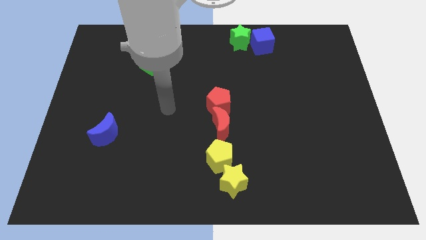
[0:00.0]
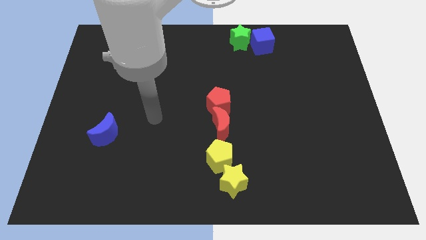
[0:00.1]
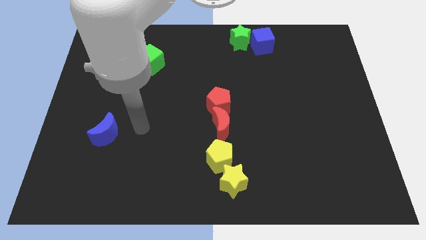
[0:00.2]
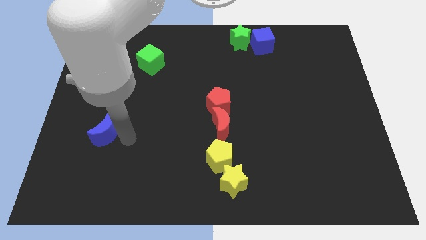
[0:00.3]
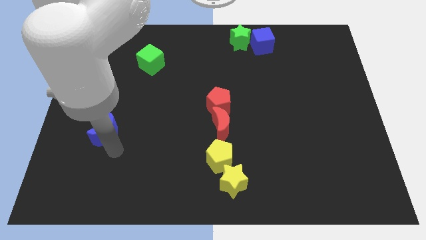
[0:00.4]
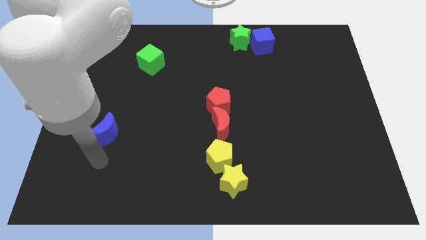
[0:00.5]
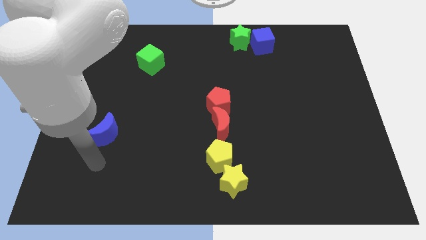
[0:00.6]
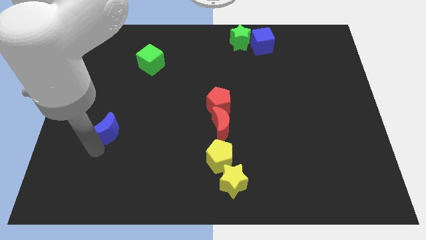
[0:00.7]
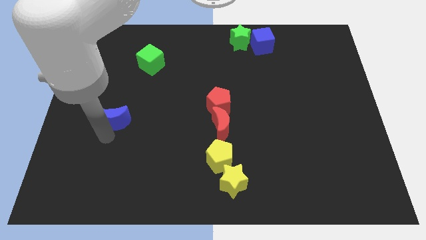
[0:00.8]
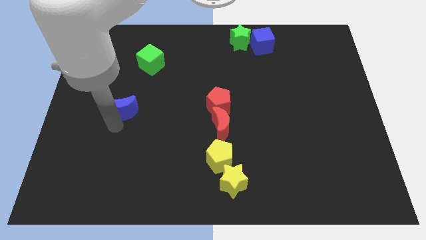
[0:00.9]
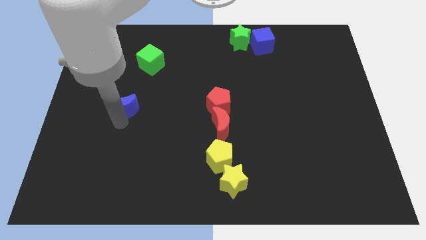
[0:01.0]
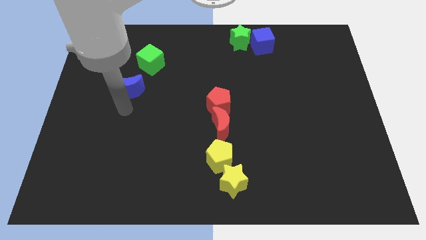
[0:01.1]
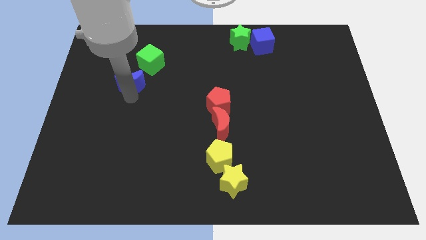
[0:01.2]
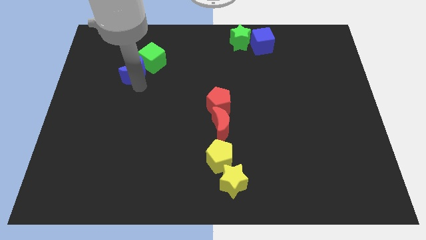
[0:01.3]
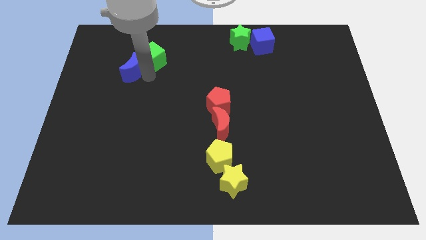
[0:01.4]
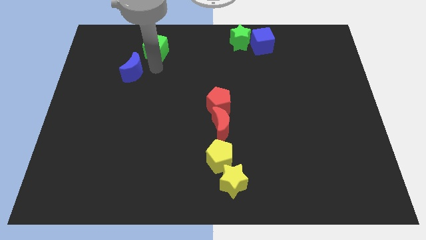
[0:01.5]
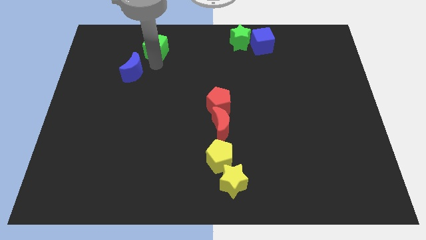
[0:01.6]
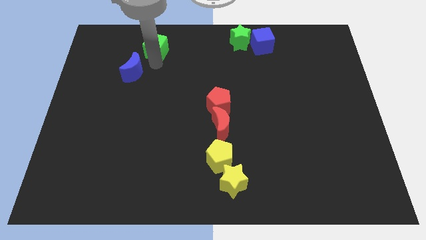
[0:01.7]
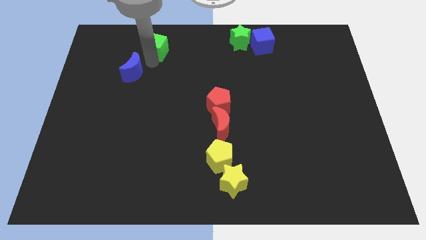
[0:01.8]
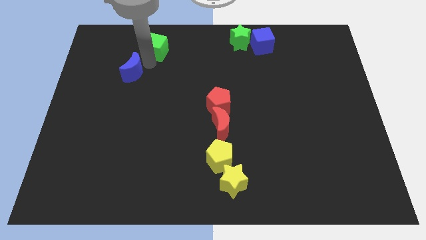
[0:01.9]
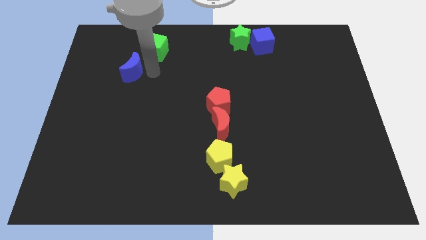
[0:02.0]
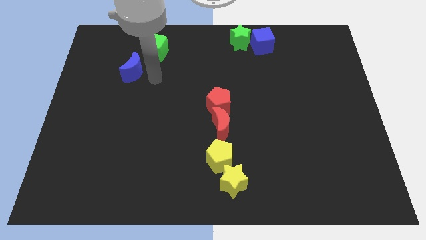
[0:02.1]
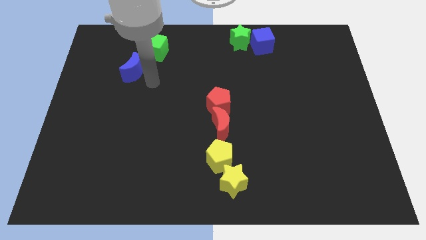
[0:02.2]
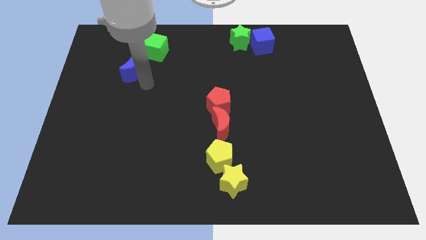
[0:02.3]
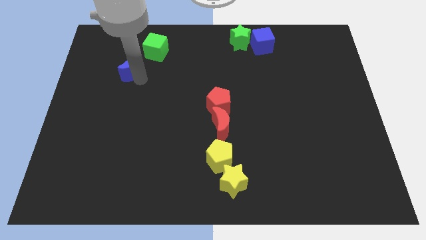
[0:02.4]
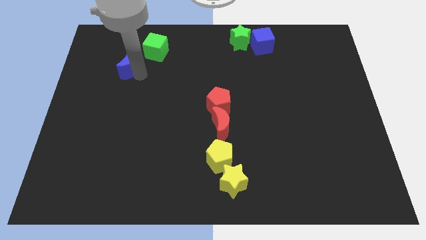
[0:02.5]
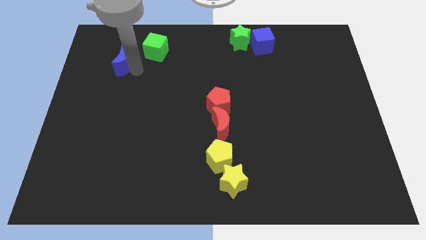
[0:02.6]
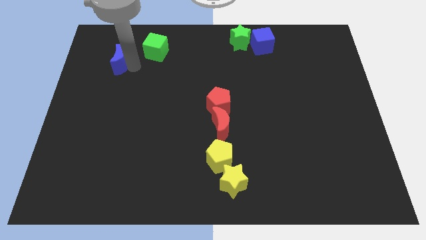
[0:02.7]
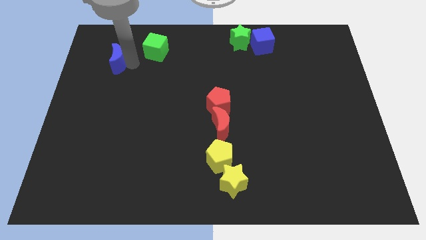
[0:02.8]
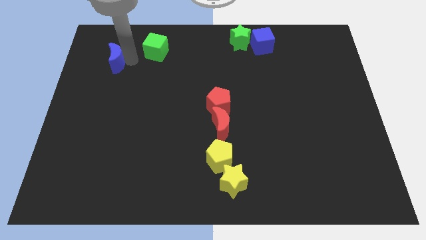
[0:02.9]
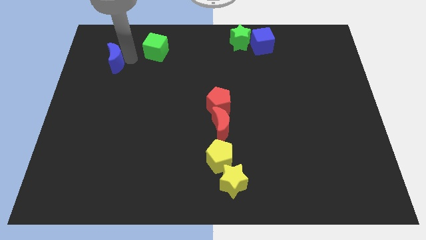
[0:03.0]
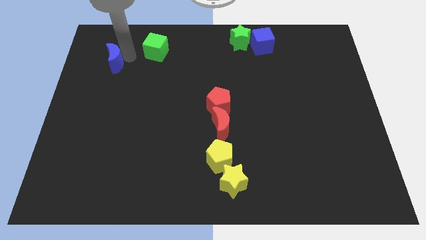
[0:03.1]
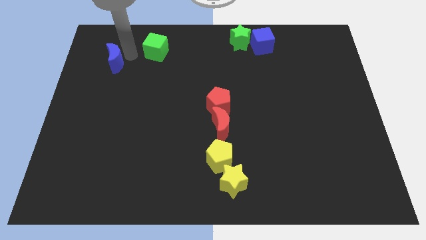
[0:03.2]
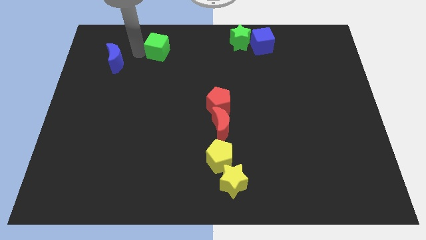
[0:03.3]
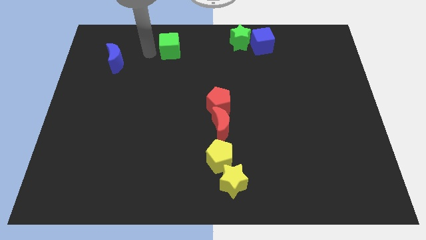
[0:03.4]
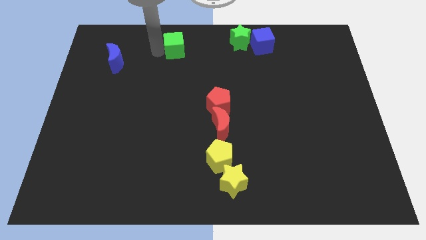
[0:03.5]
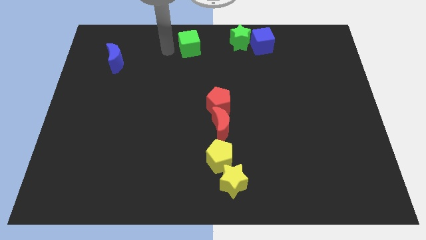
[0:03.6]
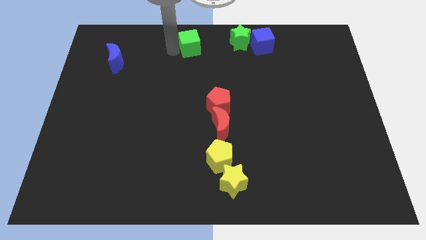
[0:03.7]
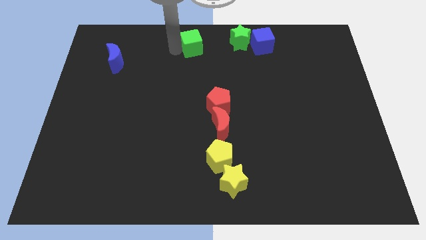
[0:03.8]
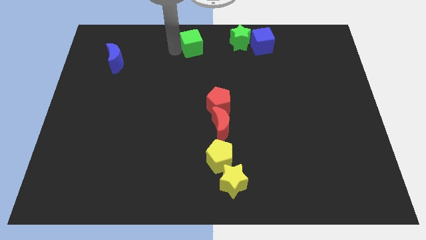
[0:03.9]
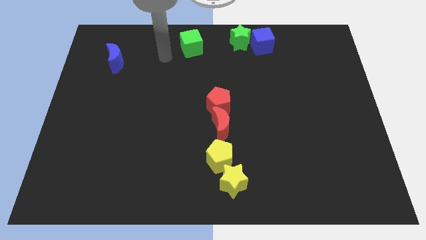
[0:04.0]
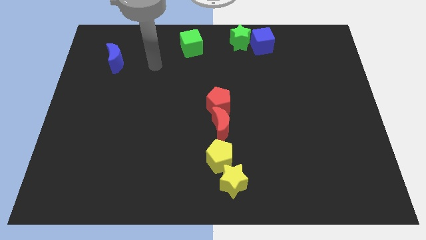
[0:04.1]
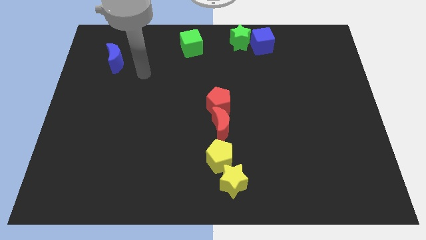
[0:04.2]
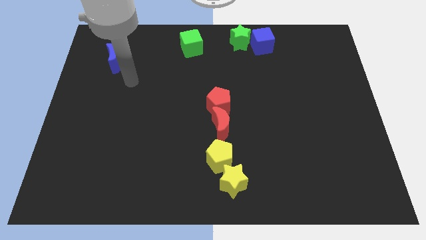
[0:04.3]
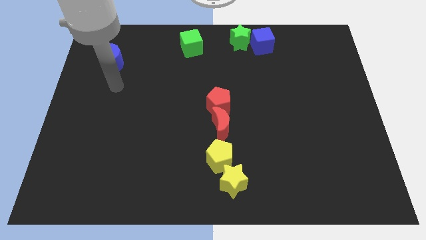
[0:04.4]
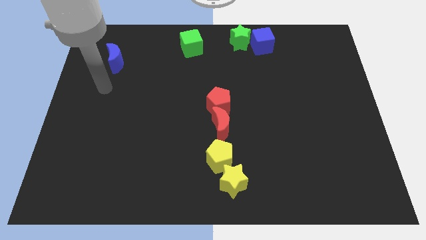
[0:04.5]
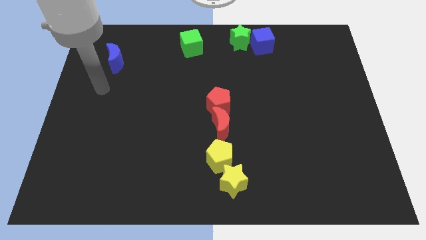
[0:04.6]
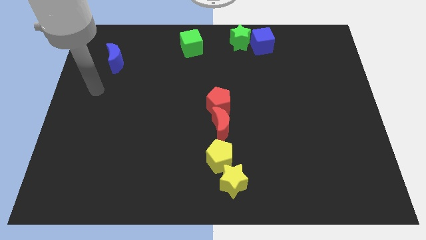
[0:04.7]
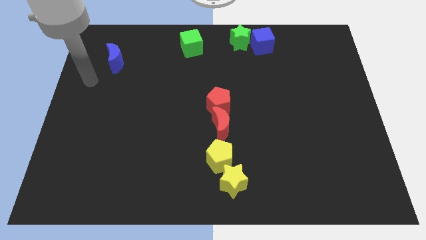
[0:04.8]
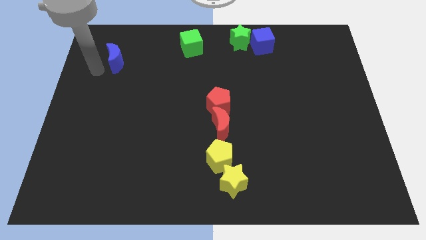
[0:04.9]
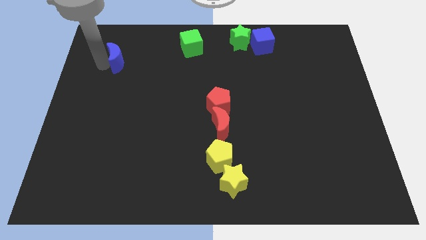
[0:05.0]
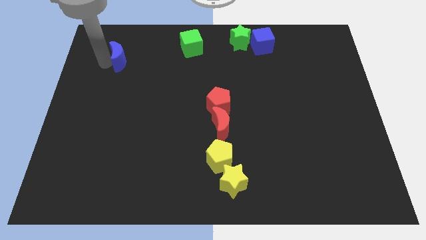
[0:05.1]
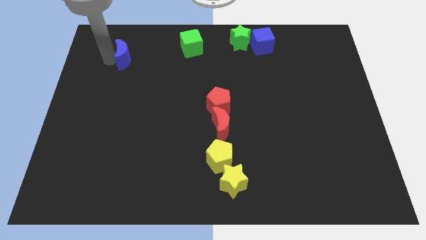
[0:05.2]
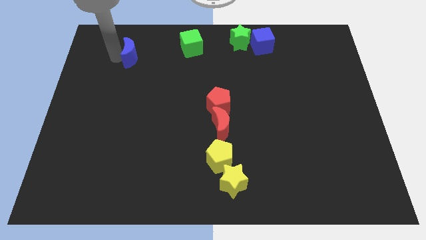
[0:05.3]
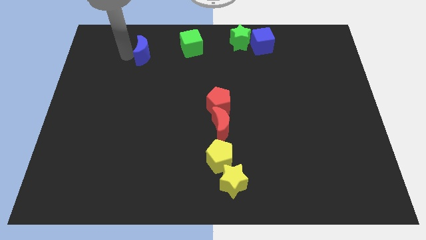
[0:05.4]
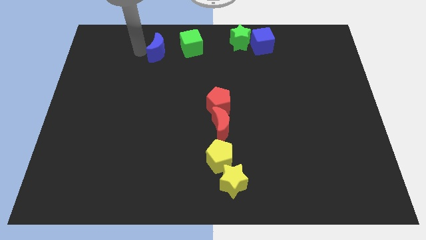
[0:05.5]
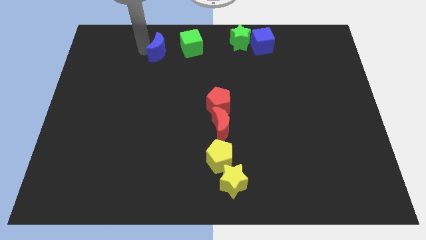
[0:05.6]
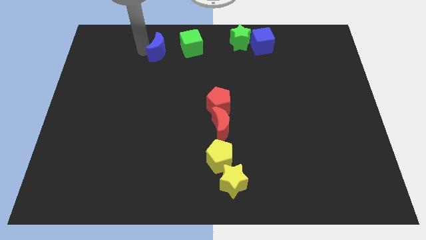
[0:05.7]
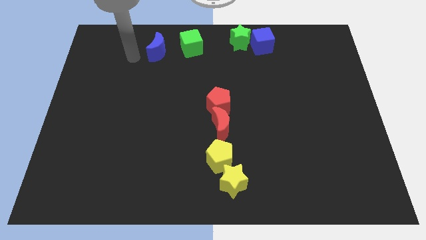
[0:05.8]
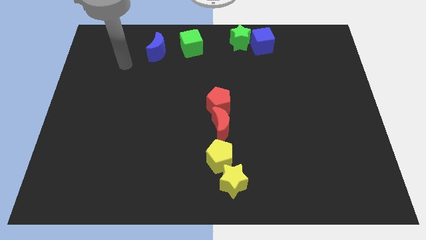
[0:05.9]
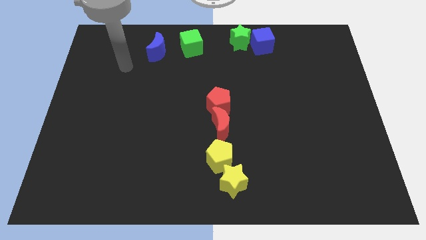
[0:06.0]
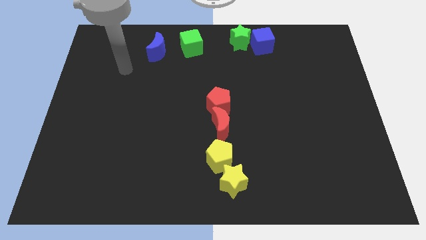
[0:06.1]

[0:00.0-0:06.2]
slide green cube and blue moon towards top center

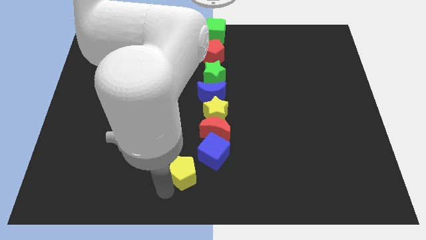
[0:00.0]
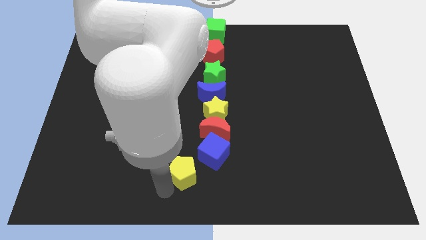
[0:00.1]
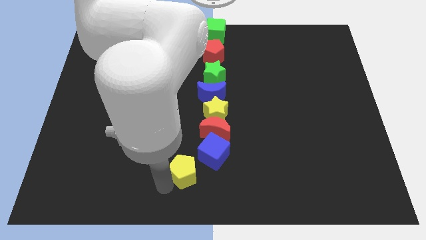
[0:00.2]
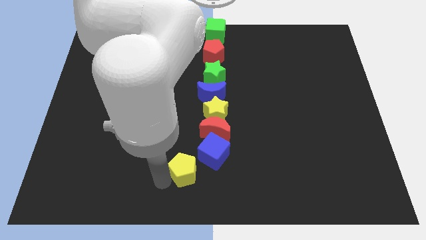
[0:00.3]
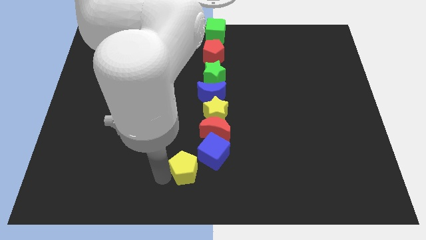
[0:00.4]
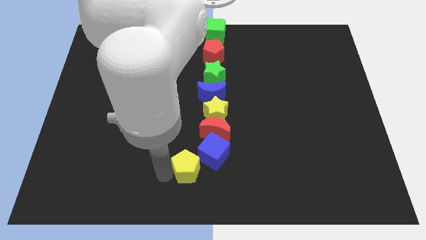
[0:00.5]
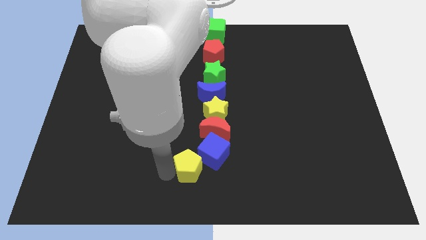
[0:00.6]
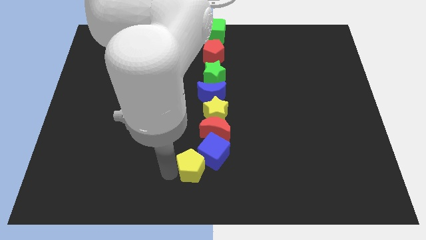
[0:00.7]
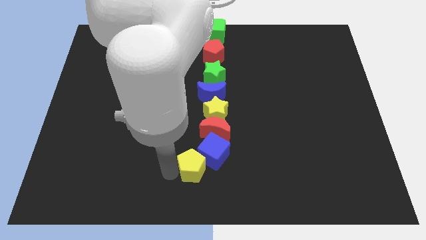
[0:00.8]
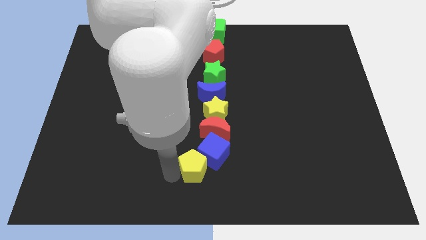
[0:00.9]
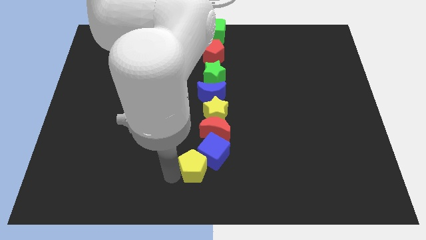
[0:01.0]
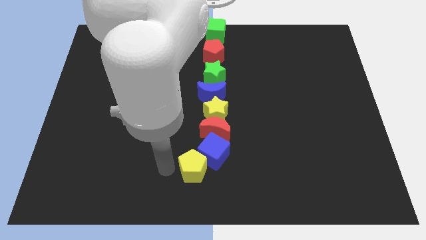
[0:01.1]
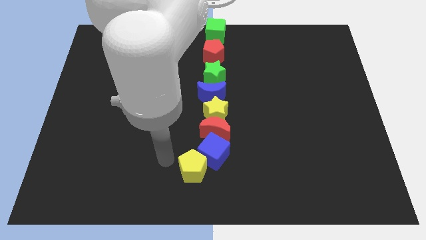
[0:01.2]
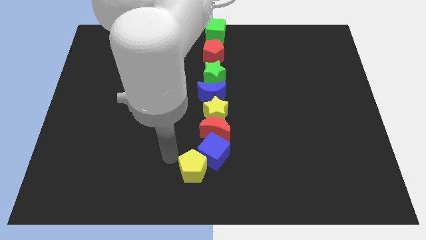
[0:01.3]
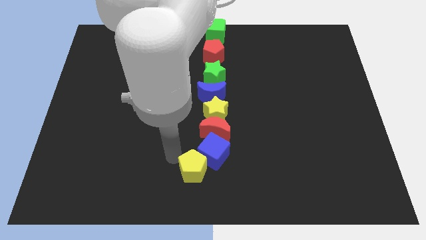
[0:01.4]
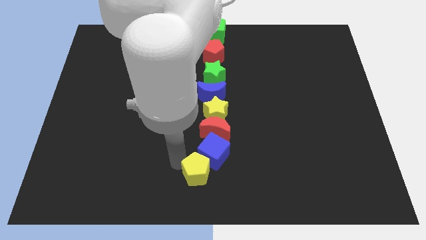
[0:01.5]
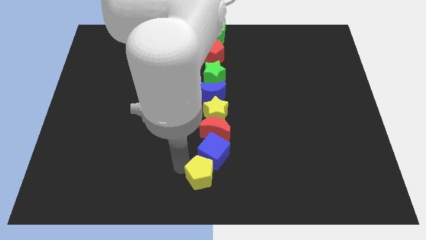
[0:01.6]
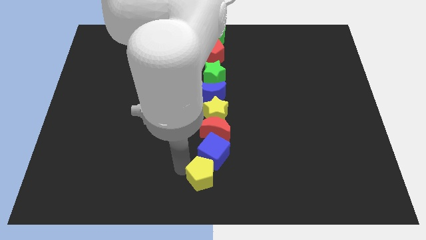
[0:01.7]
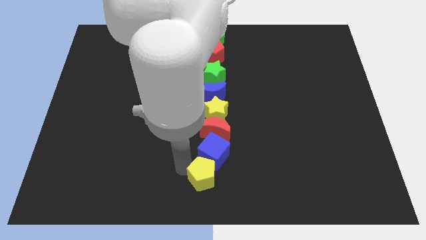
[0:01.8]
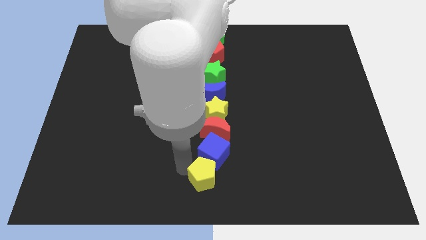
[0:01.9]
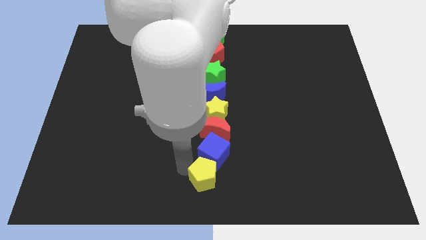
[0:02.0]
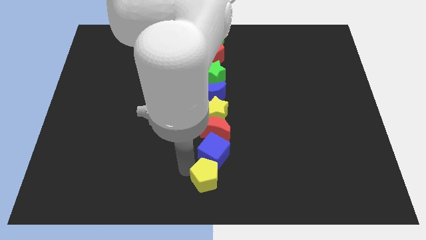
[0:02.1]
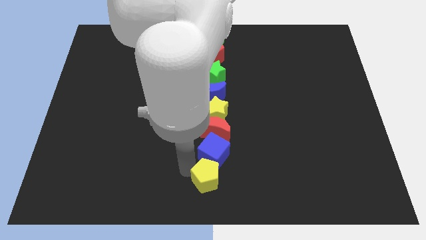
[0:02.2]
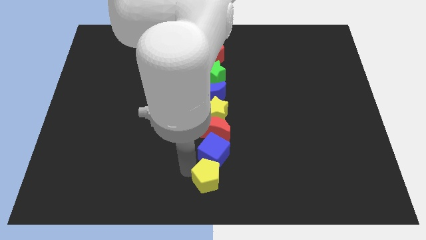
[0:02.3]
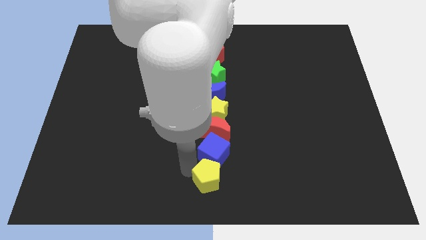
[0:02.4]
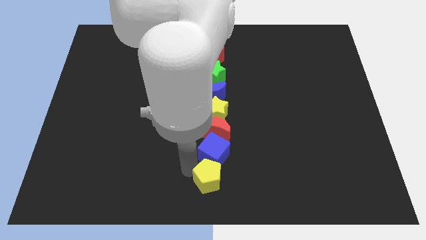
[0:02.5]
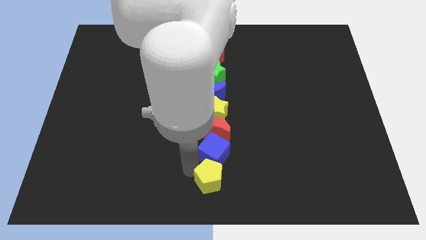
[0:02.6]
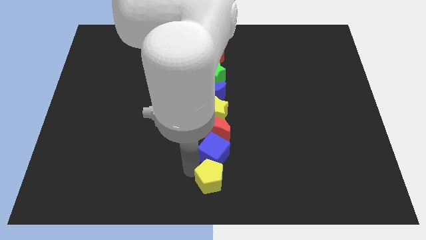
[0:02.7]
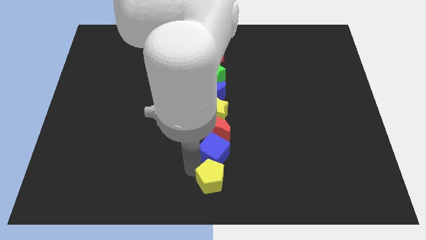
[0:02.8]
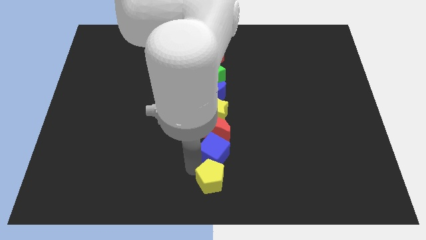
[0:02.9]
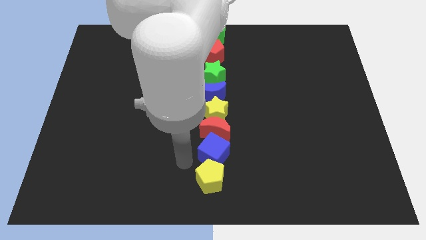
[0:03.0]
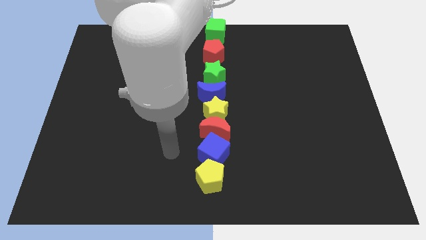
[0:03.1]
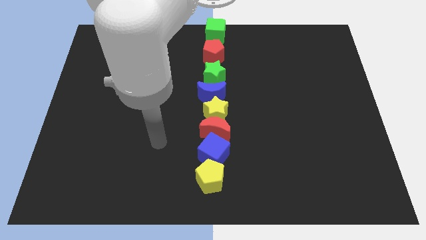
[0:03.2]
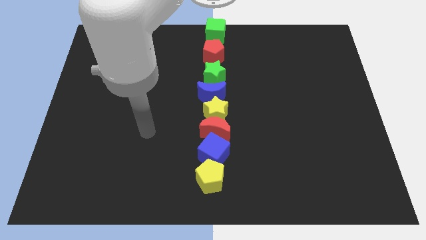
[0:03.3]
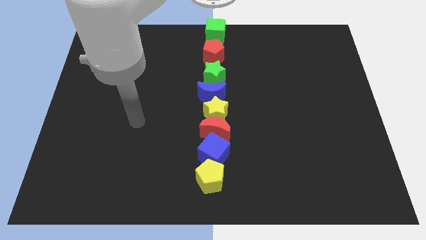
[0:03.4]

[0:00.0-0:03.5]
push the yellow pentagon with all the blocks at the bottom center
